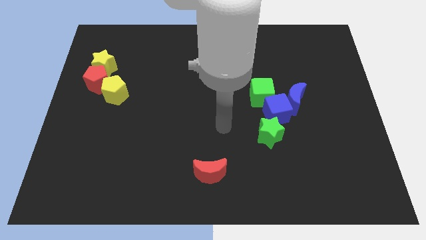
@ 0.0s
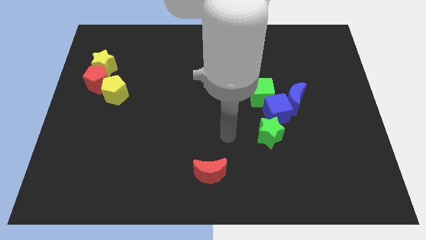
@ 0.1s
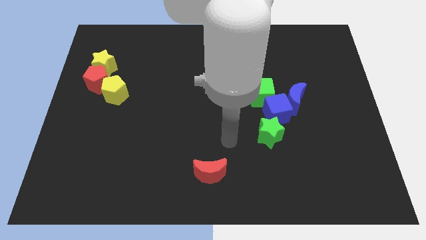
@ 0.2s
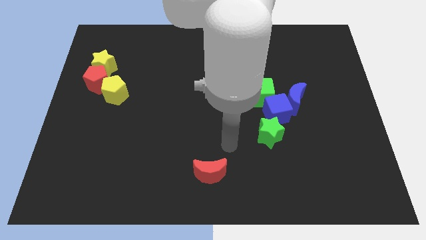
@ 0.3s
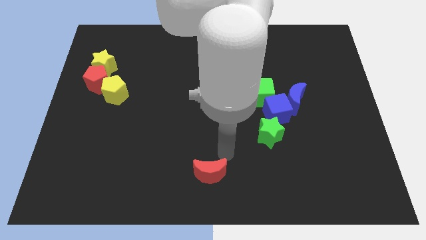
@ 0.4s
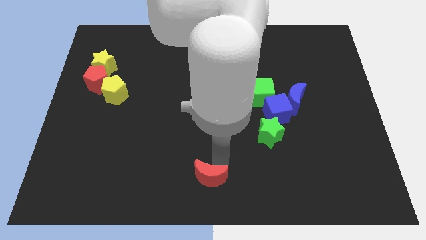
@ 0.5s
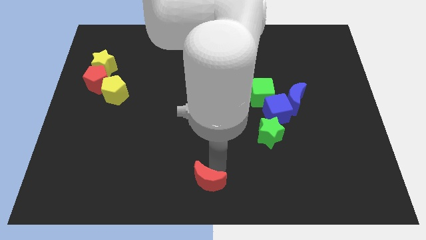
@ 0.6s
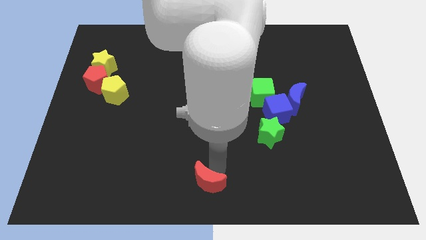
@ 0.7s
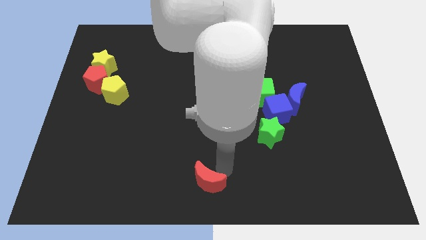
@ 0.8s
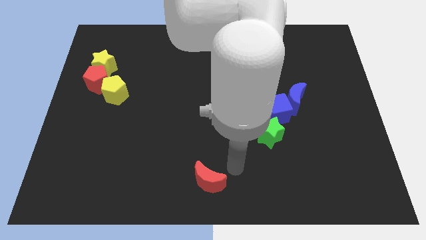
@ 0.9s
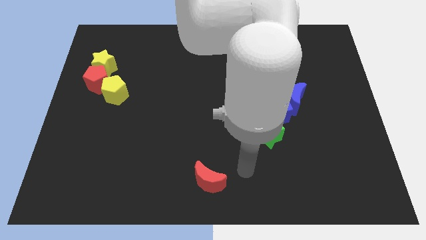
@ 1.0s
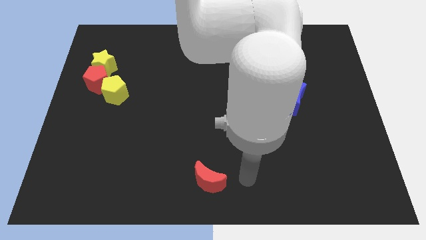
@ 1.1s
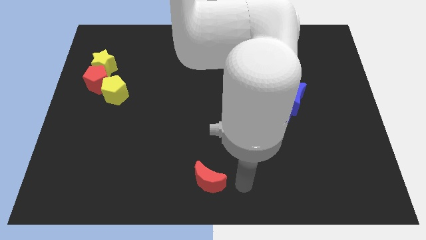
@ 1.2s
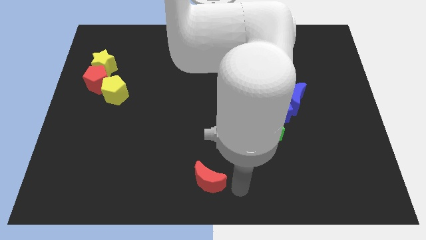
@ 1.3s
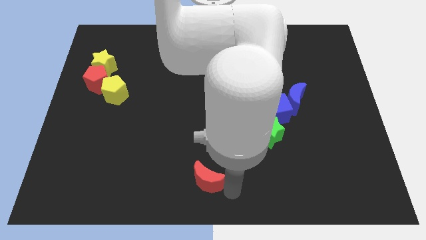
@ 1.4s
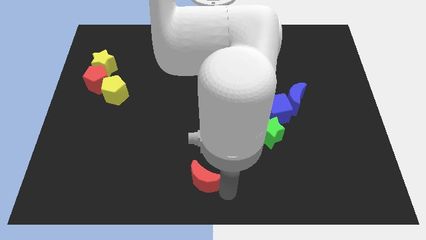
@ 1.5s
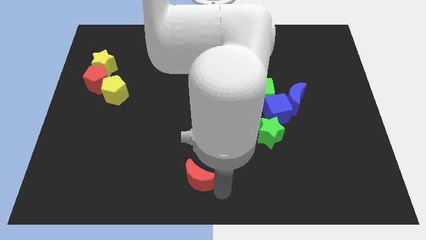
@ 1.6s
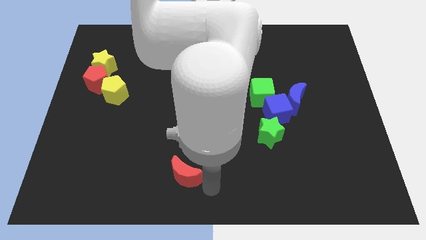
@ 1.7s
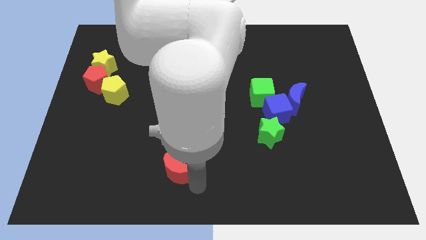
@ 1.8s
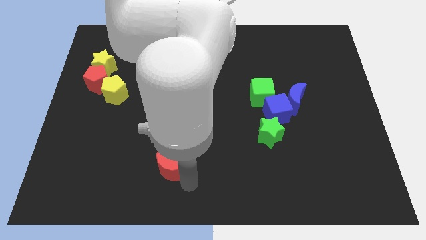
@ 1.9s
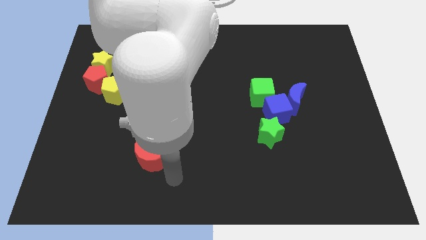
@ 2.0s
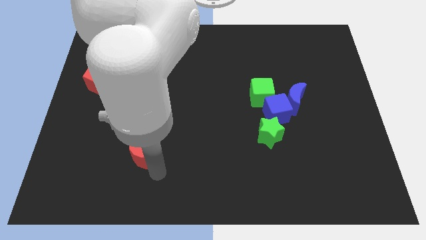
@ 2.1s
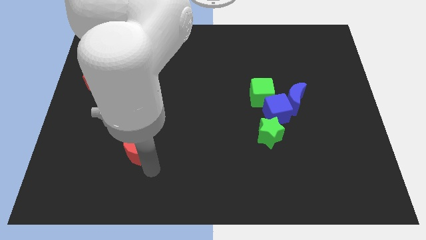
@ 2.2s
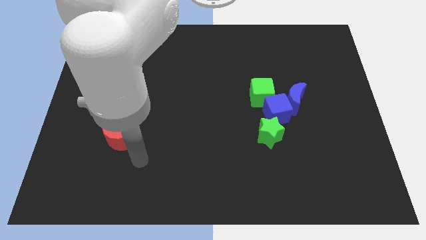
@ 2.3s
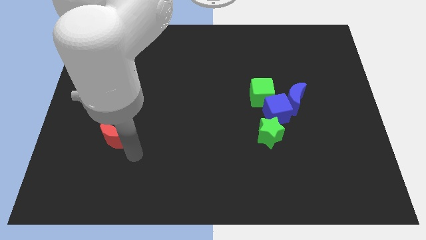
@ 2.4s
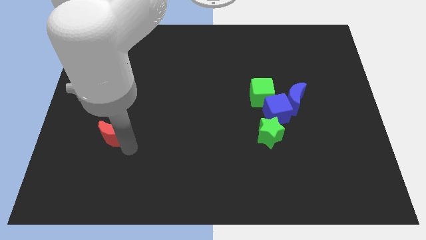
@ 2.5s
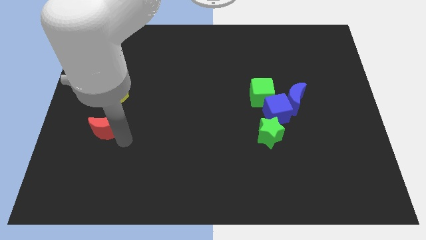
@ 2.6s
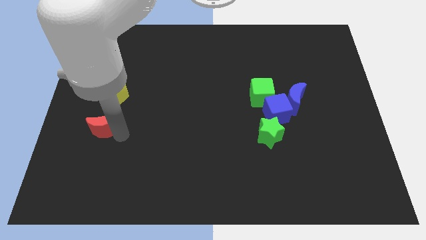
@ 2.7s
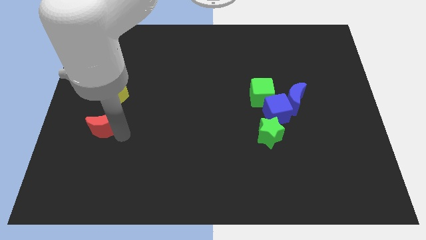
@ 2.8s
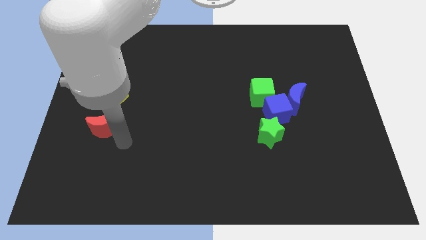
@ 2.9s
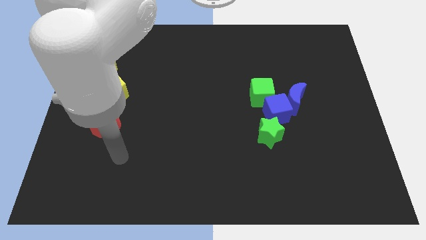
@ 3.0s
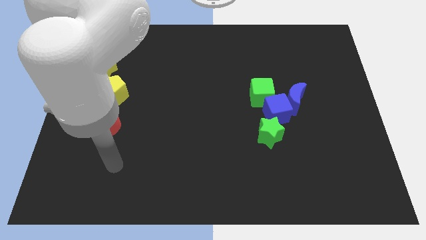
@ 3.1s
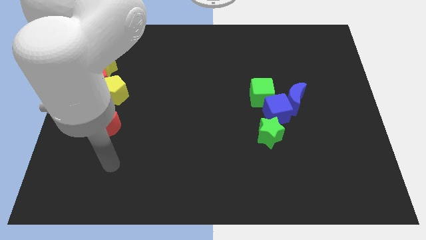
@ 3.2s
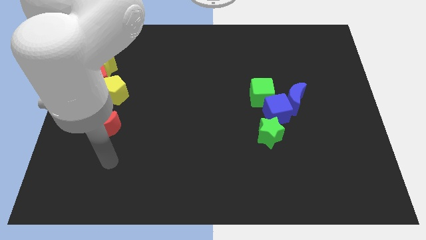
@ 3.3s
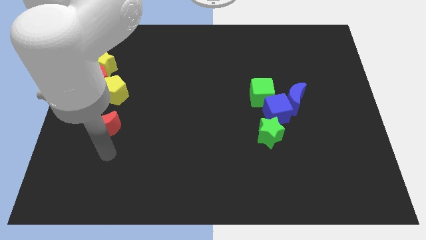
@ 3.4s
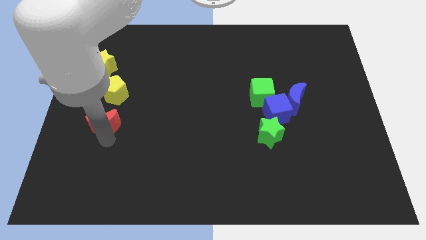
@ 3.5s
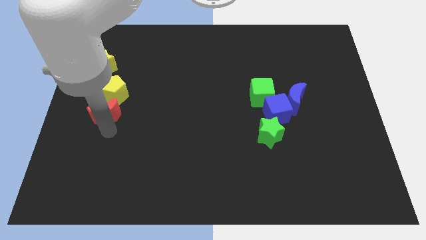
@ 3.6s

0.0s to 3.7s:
drag the red crescent towards the yellow pentagon

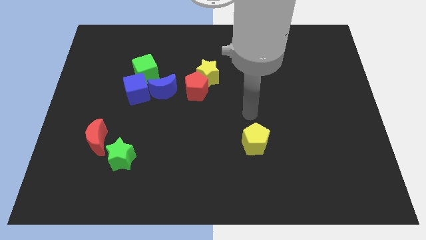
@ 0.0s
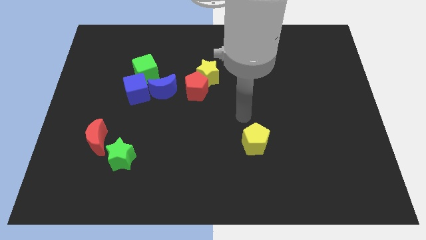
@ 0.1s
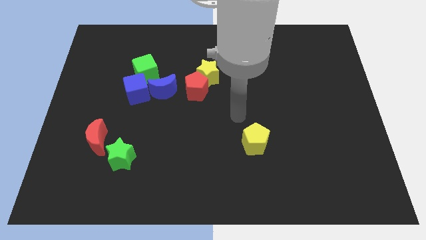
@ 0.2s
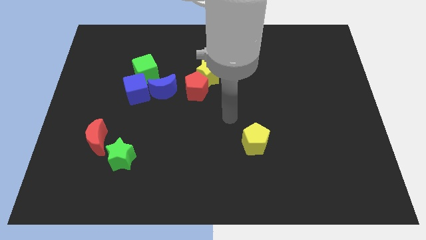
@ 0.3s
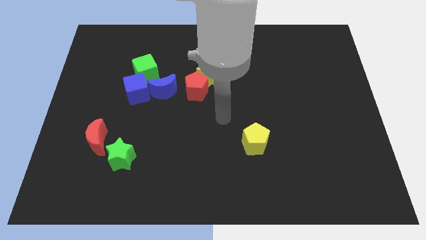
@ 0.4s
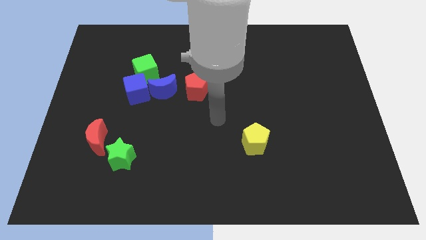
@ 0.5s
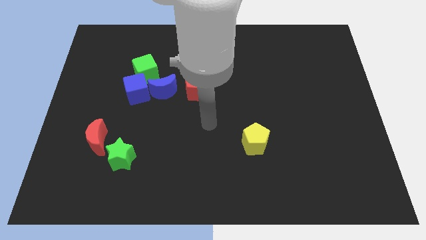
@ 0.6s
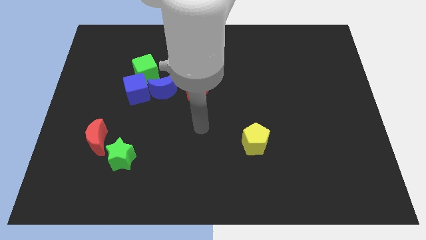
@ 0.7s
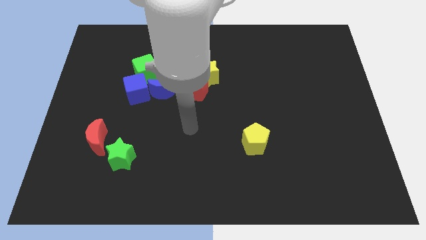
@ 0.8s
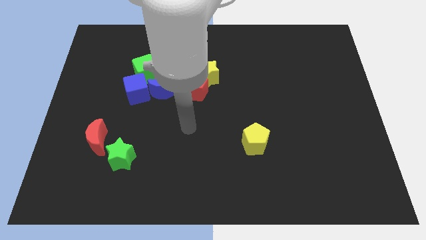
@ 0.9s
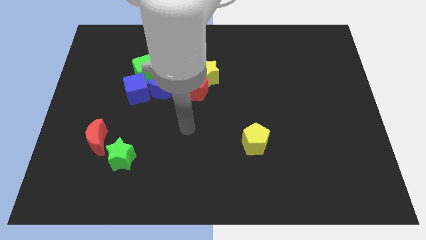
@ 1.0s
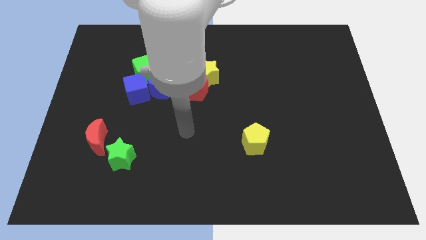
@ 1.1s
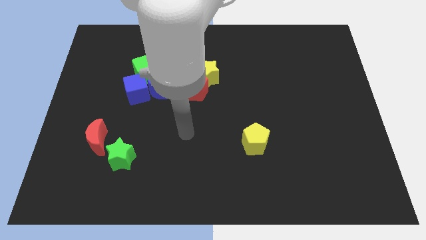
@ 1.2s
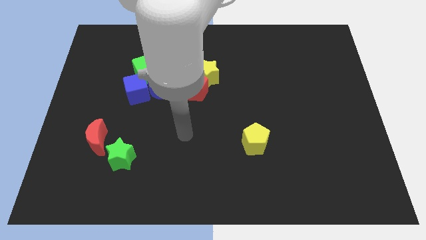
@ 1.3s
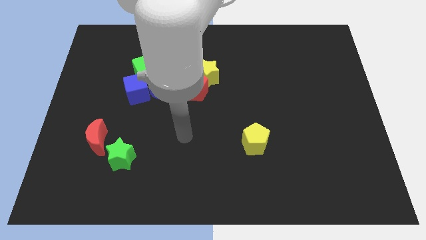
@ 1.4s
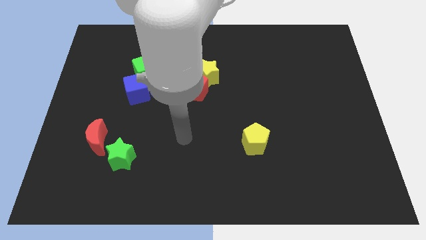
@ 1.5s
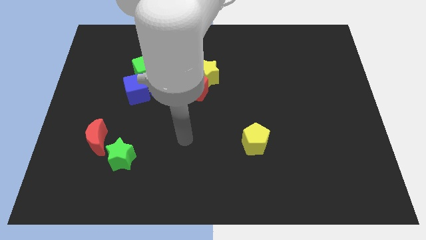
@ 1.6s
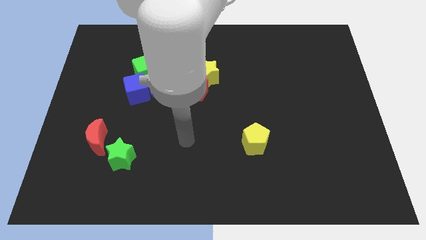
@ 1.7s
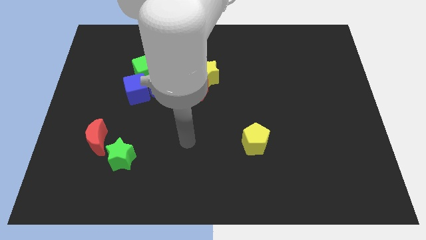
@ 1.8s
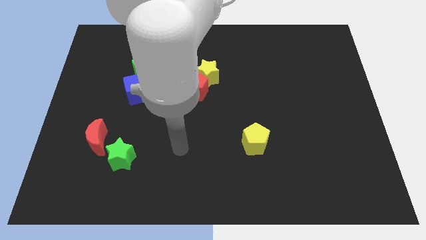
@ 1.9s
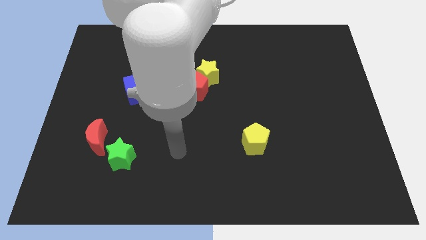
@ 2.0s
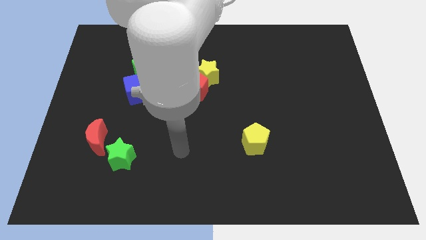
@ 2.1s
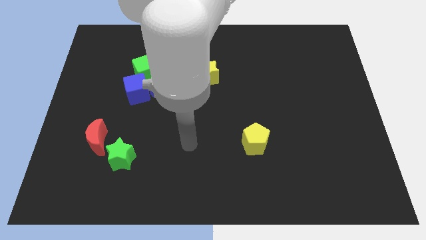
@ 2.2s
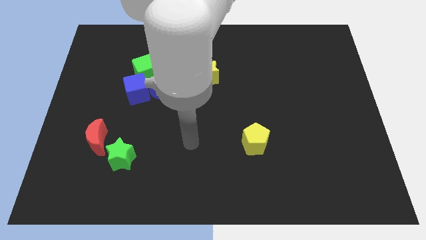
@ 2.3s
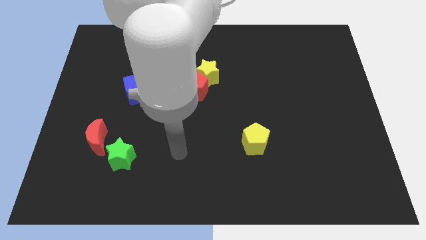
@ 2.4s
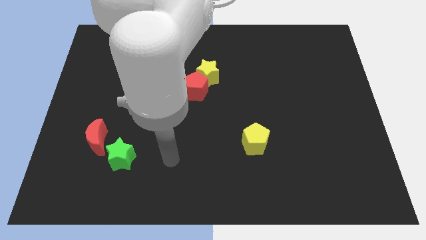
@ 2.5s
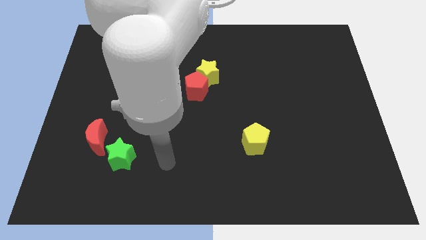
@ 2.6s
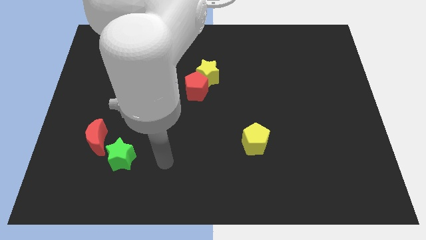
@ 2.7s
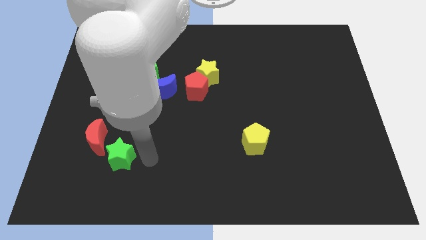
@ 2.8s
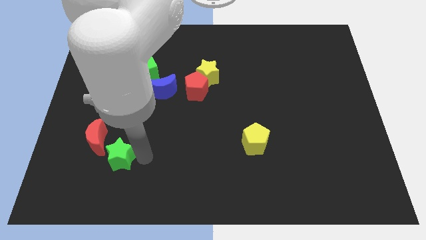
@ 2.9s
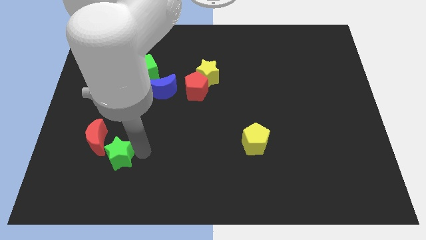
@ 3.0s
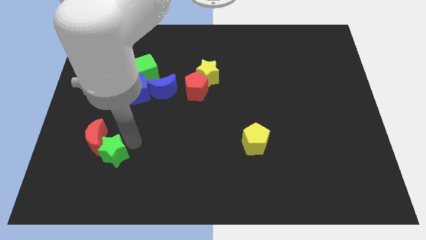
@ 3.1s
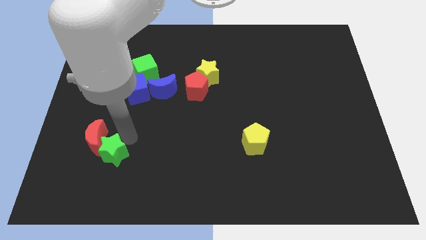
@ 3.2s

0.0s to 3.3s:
place the arm to the top of the green star

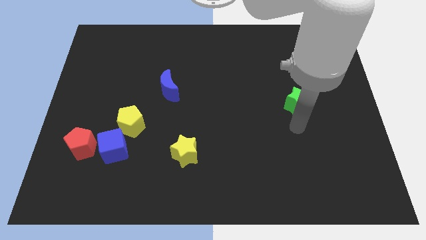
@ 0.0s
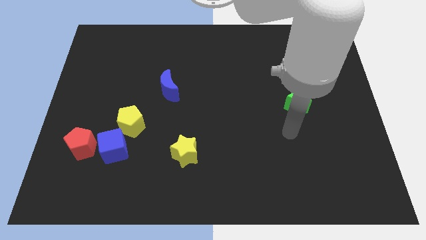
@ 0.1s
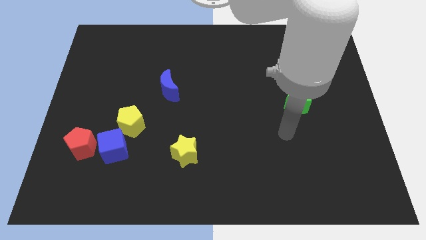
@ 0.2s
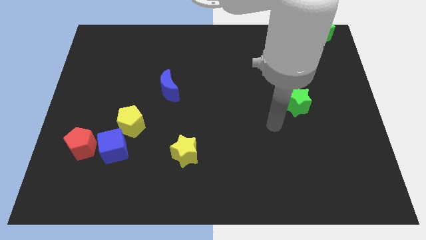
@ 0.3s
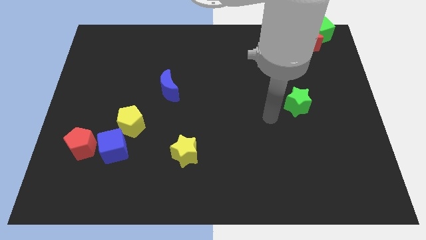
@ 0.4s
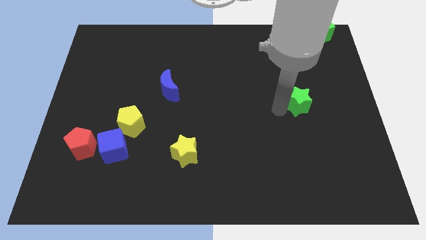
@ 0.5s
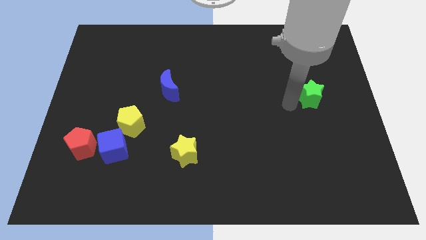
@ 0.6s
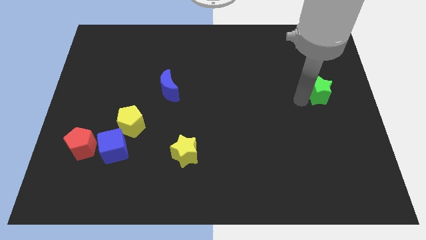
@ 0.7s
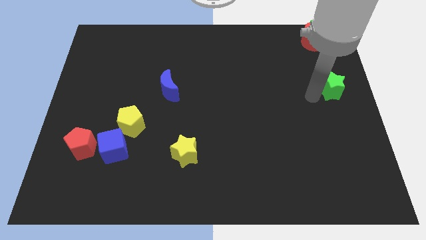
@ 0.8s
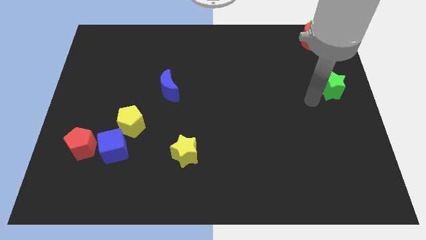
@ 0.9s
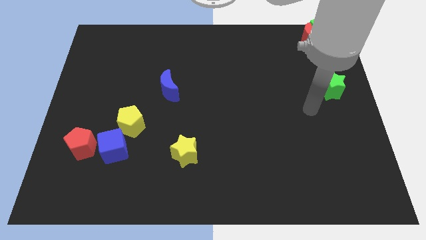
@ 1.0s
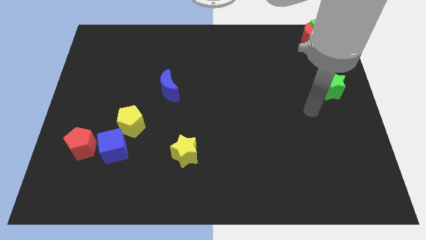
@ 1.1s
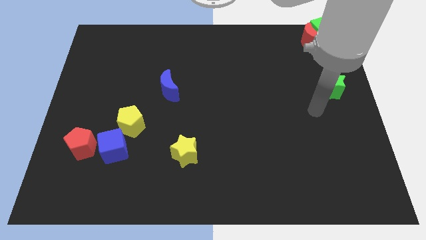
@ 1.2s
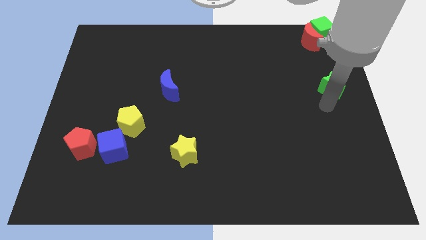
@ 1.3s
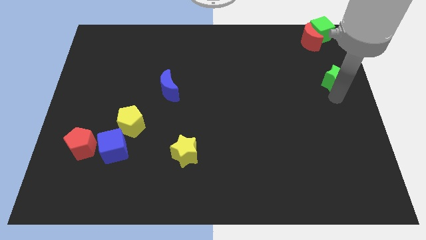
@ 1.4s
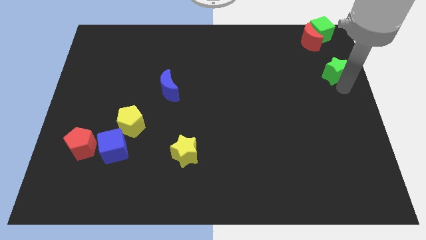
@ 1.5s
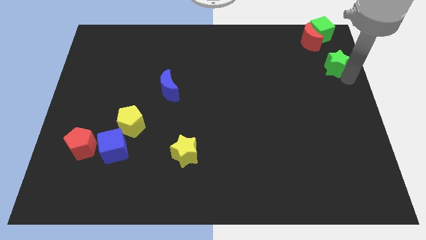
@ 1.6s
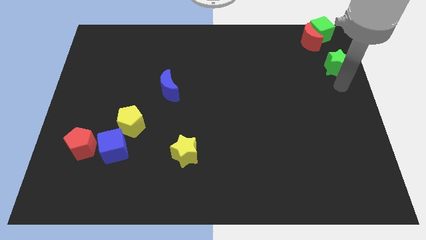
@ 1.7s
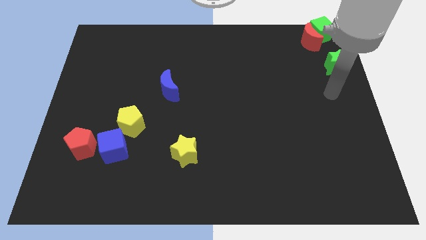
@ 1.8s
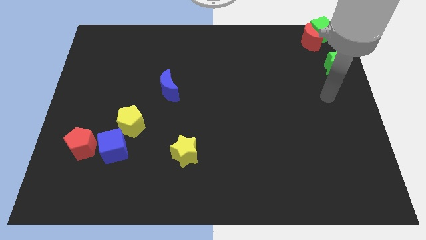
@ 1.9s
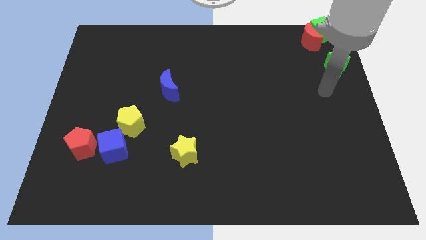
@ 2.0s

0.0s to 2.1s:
move the green star to the top right corner of the board
